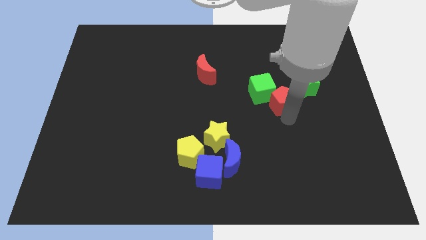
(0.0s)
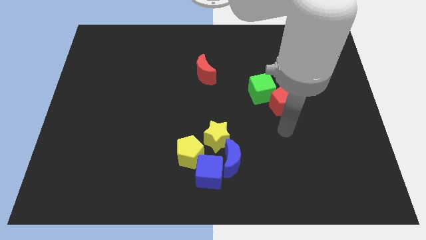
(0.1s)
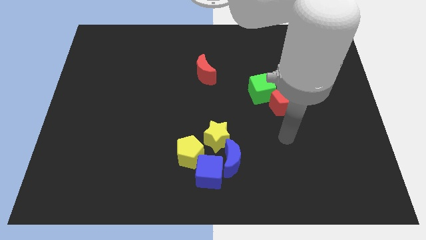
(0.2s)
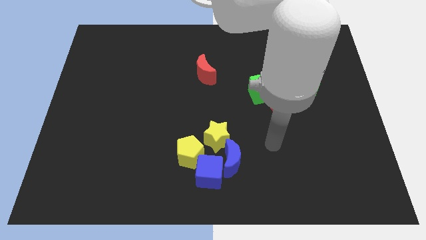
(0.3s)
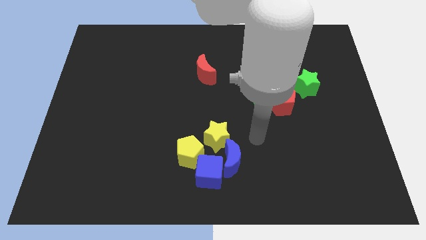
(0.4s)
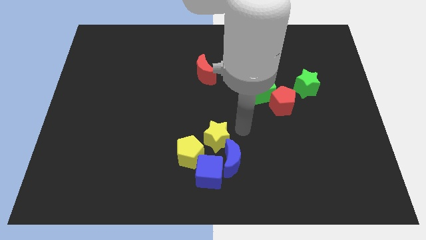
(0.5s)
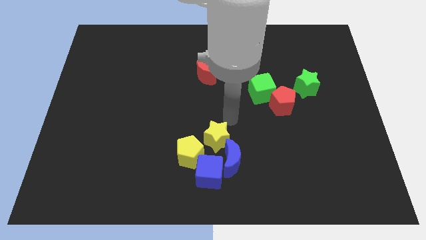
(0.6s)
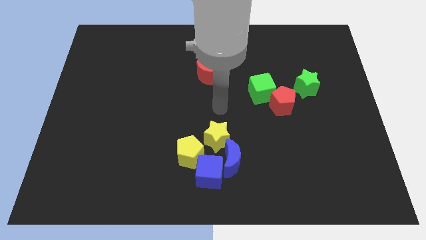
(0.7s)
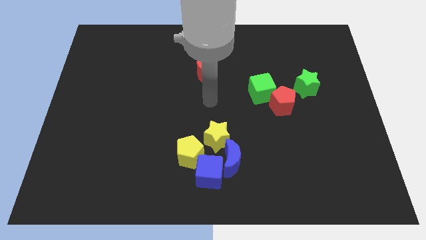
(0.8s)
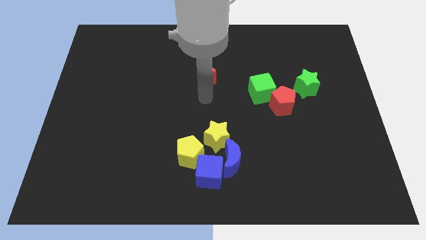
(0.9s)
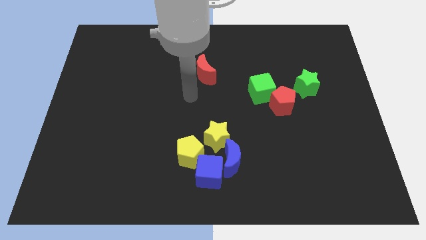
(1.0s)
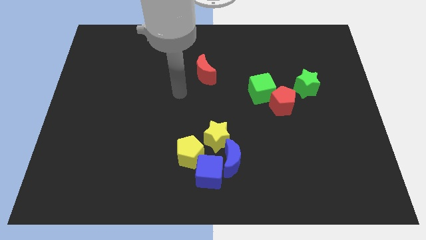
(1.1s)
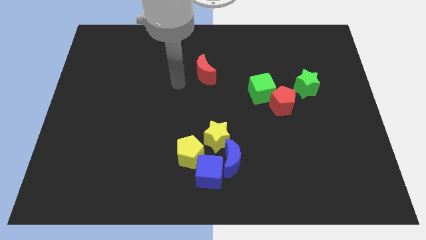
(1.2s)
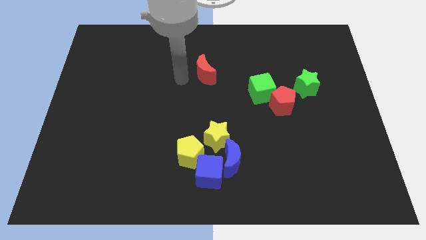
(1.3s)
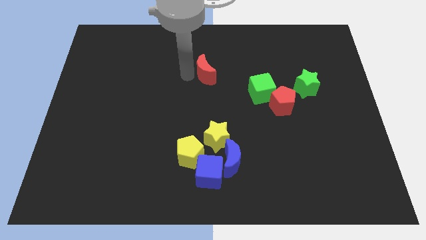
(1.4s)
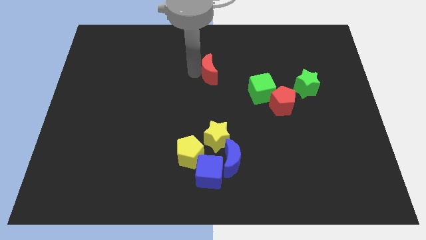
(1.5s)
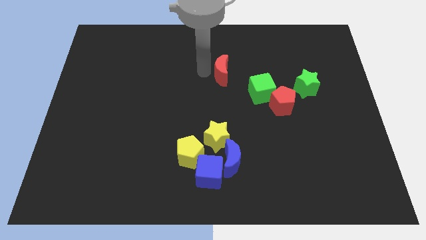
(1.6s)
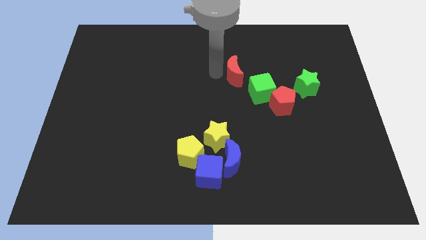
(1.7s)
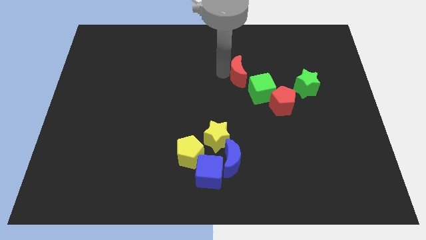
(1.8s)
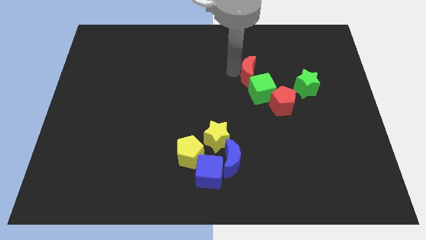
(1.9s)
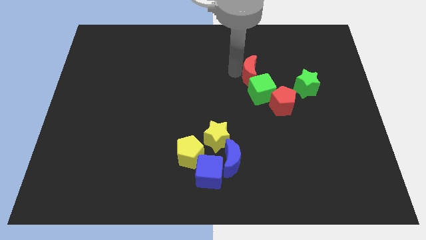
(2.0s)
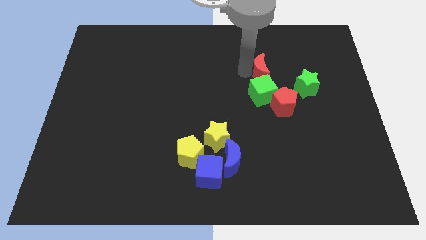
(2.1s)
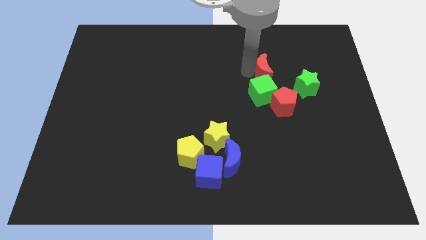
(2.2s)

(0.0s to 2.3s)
move the red crescent above the green cube

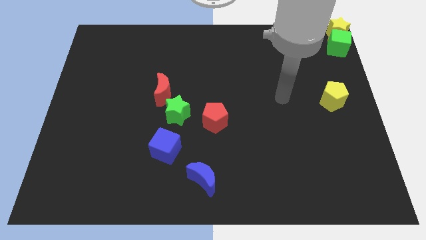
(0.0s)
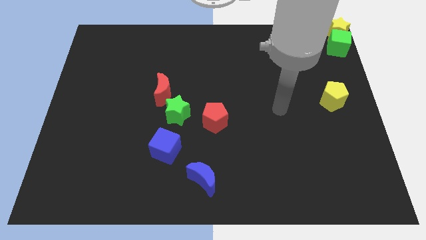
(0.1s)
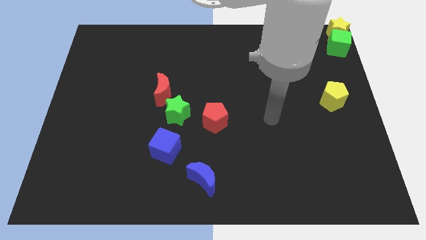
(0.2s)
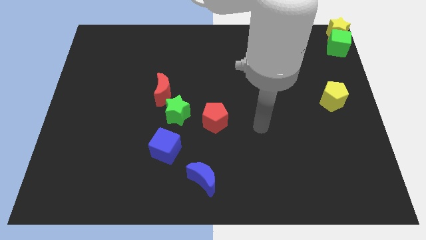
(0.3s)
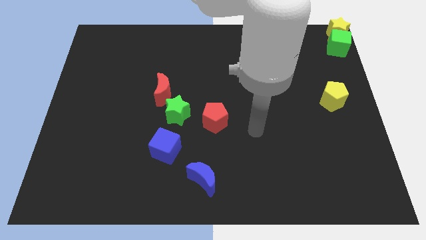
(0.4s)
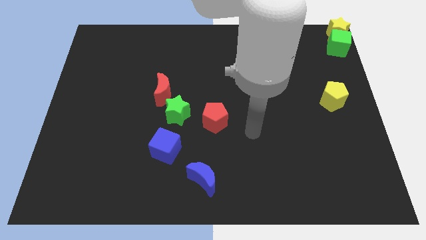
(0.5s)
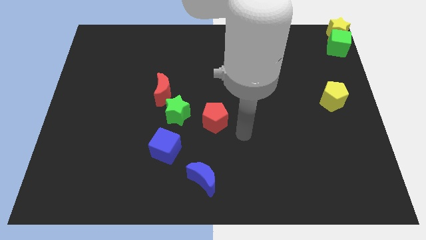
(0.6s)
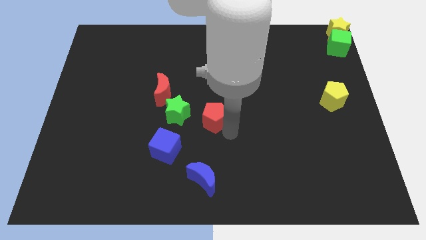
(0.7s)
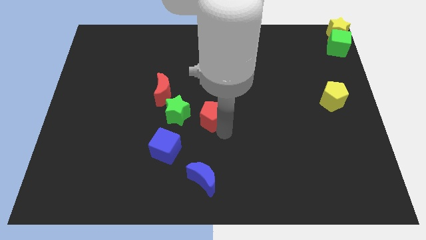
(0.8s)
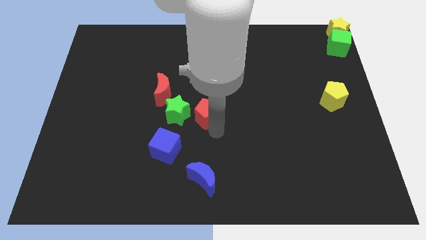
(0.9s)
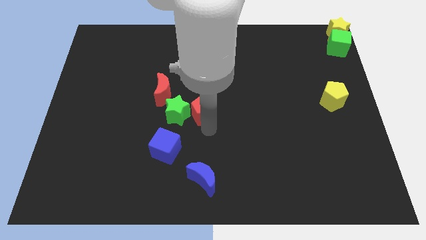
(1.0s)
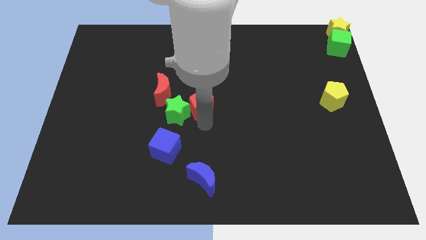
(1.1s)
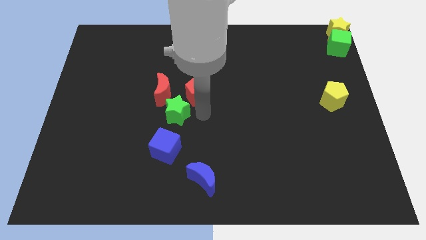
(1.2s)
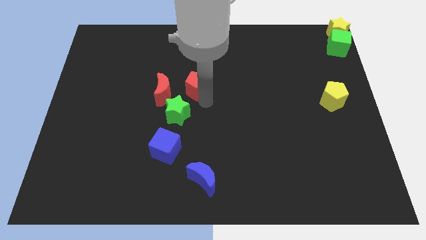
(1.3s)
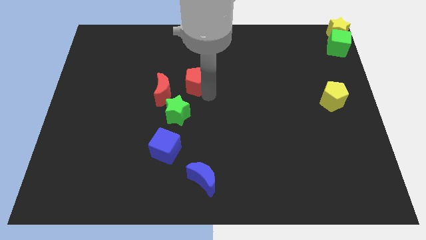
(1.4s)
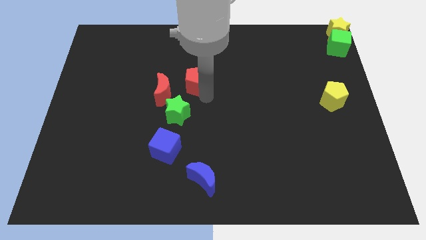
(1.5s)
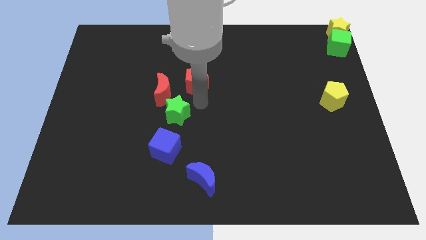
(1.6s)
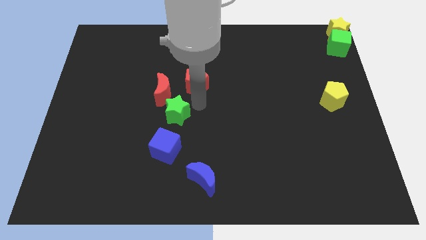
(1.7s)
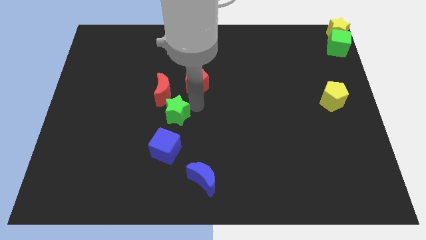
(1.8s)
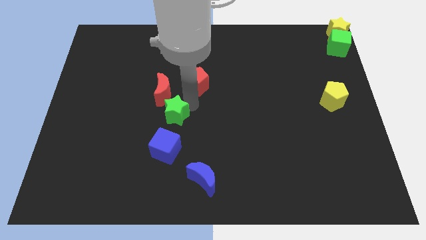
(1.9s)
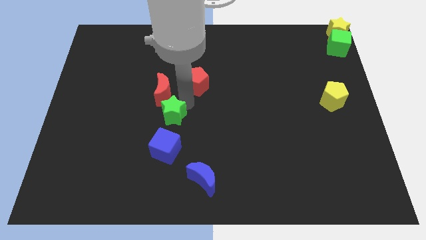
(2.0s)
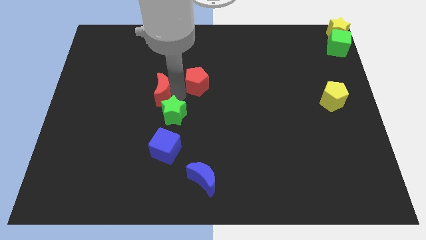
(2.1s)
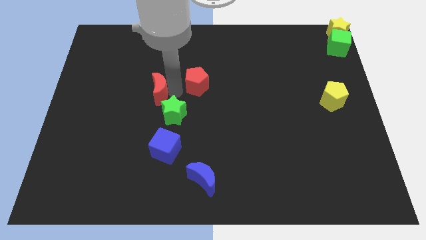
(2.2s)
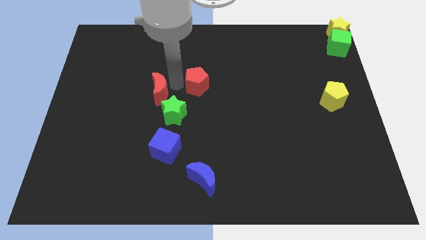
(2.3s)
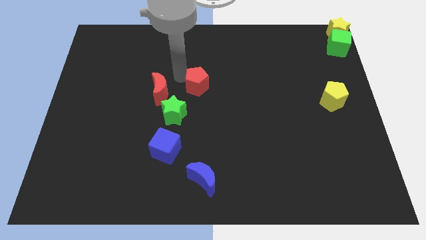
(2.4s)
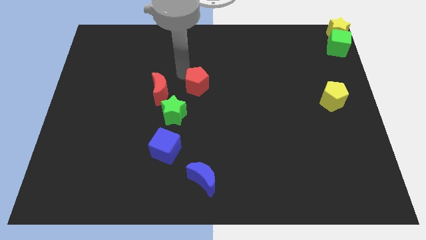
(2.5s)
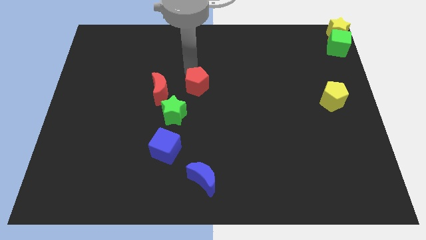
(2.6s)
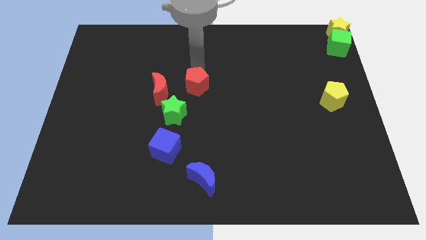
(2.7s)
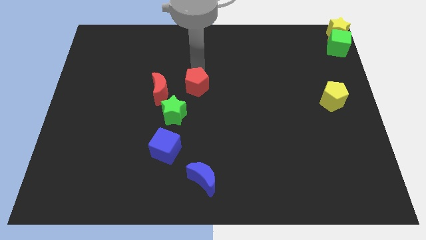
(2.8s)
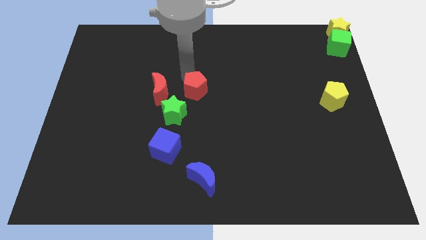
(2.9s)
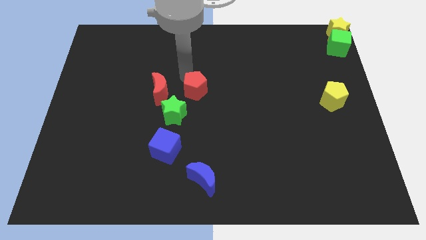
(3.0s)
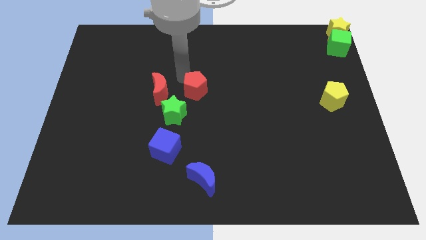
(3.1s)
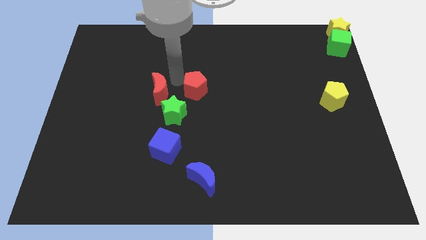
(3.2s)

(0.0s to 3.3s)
push the red pentagon at the top right side of the green star

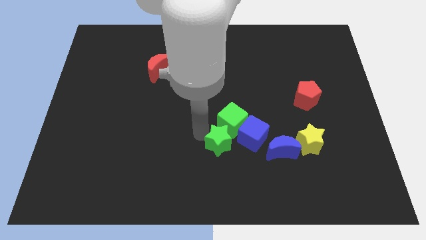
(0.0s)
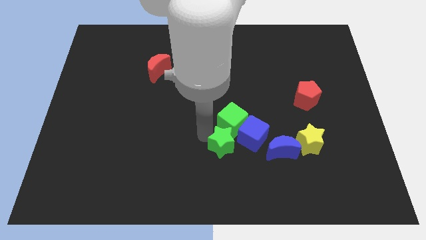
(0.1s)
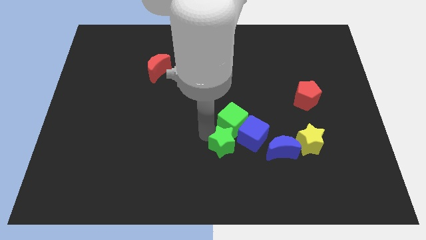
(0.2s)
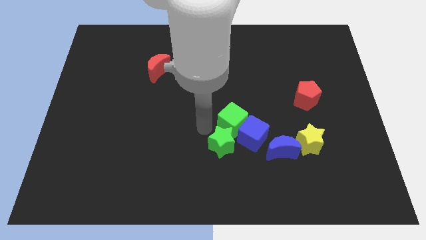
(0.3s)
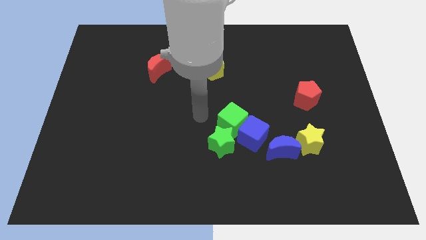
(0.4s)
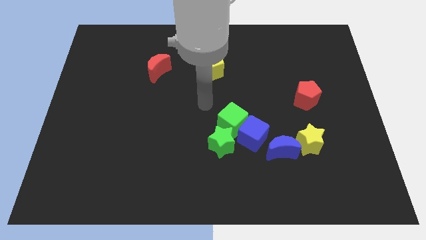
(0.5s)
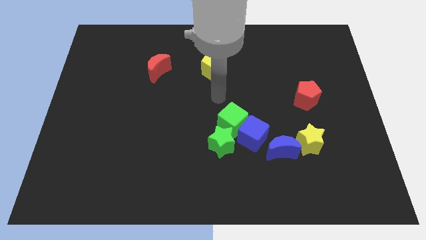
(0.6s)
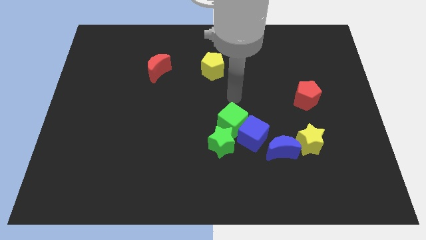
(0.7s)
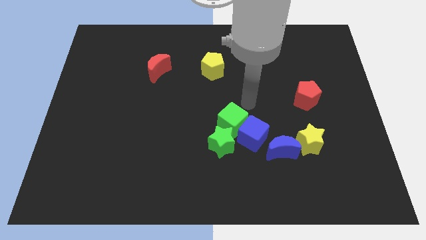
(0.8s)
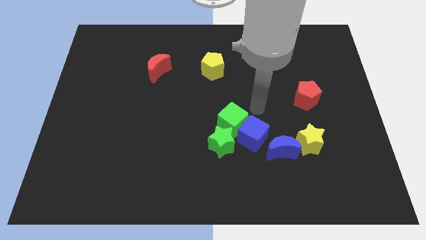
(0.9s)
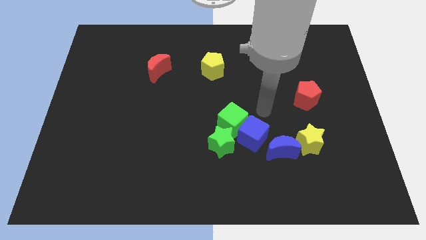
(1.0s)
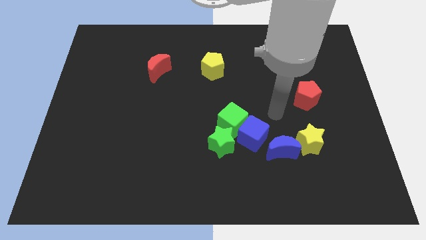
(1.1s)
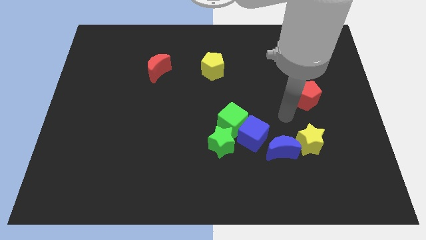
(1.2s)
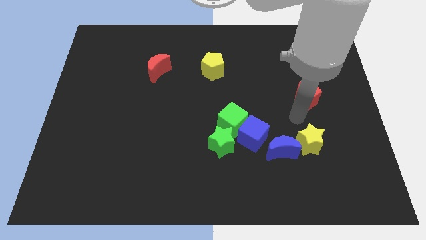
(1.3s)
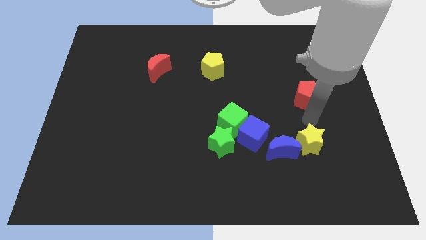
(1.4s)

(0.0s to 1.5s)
push the green star to the left bottom of the green cube

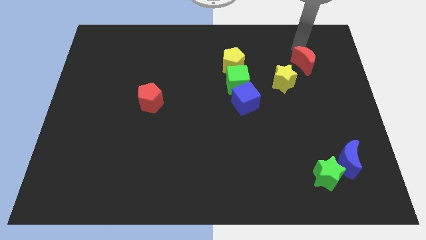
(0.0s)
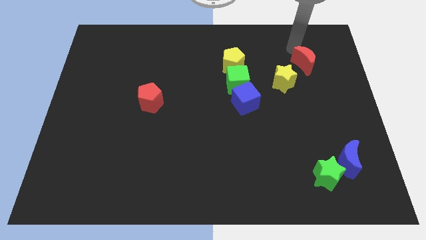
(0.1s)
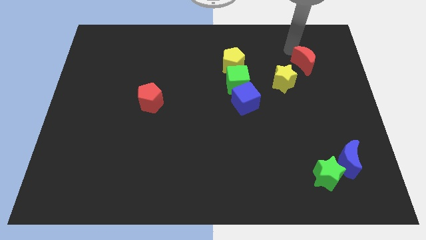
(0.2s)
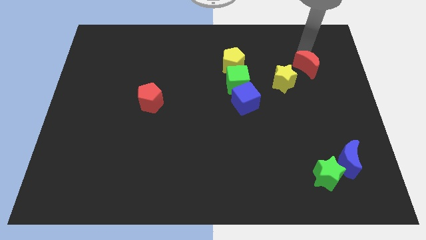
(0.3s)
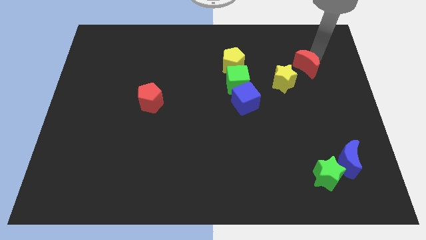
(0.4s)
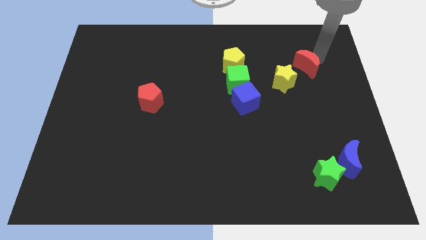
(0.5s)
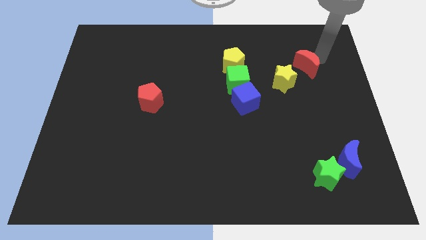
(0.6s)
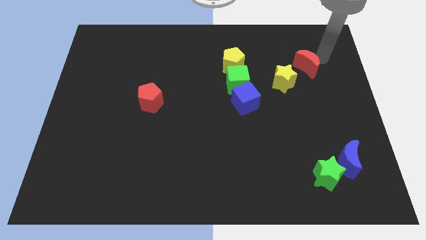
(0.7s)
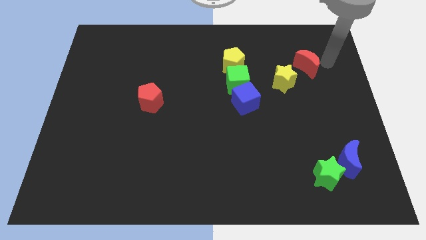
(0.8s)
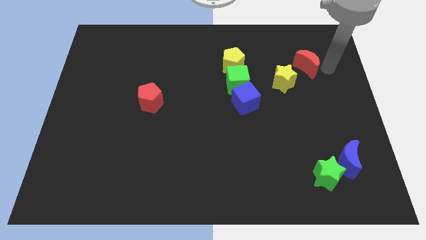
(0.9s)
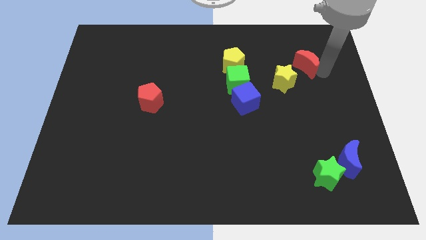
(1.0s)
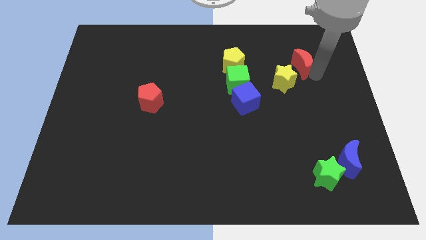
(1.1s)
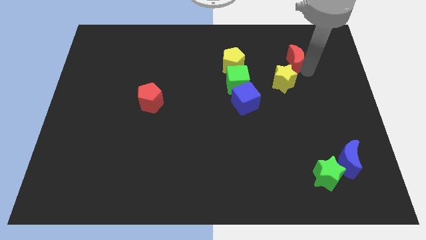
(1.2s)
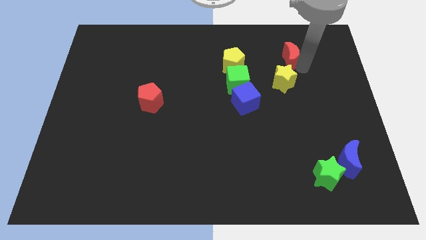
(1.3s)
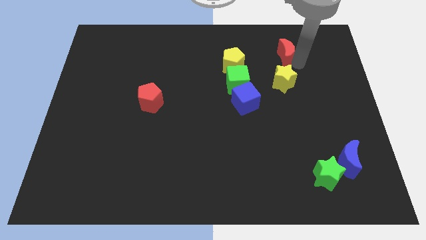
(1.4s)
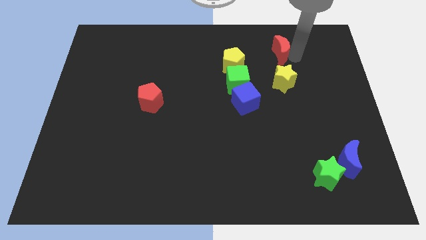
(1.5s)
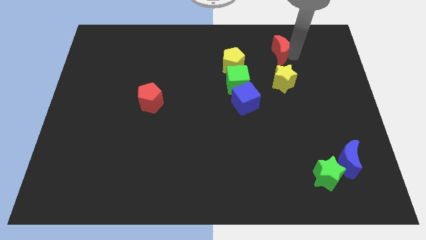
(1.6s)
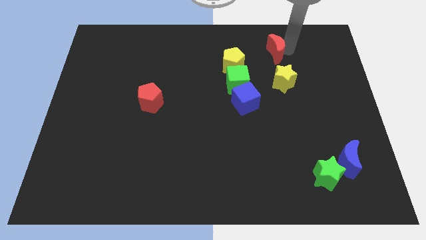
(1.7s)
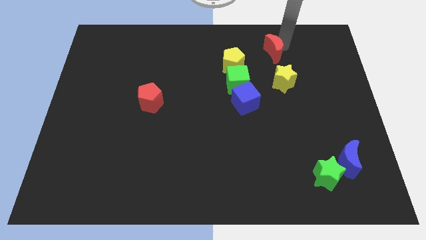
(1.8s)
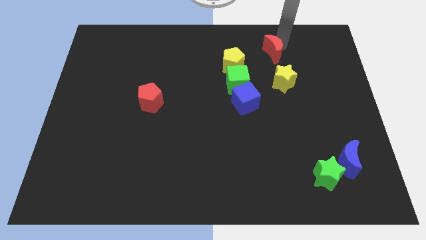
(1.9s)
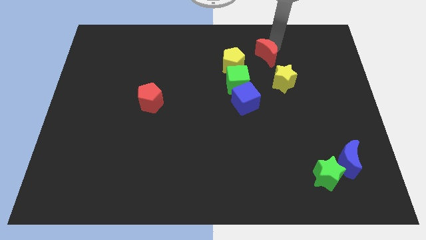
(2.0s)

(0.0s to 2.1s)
push the red crescent towards the yellow pentagon
